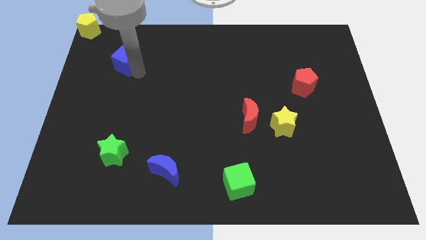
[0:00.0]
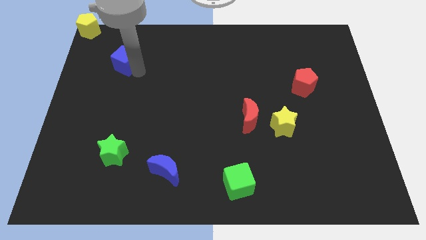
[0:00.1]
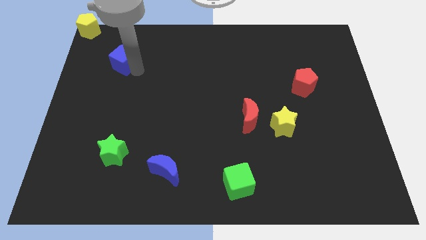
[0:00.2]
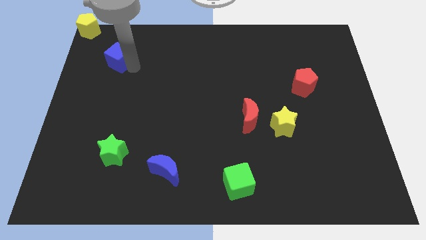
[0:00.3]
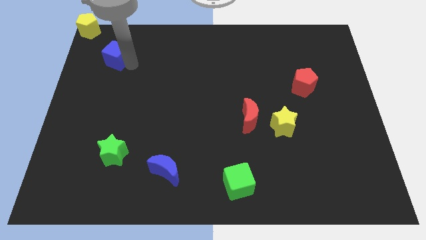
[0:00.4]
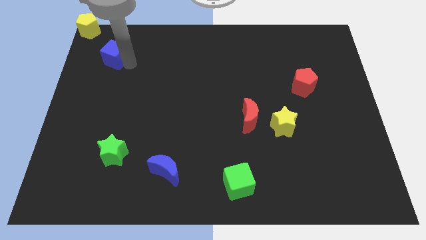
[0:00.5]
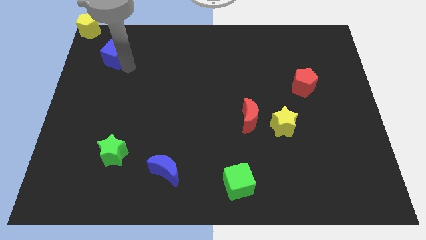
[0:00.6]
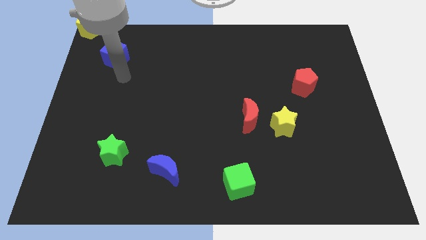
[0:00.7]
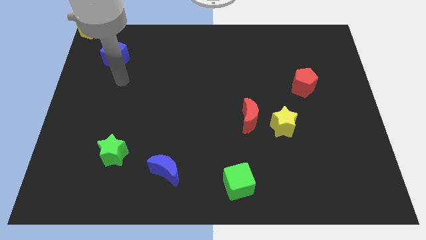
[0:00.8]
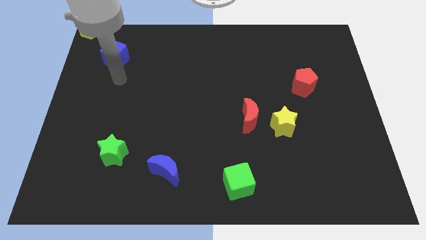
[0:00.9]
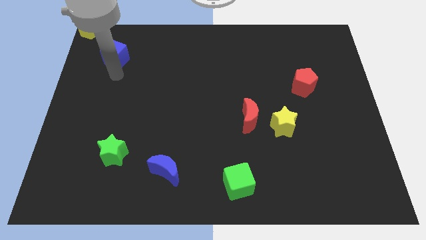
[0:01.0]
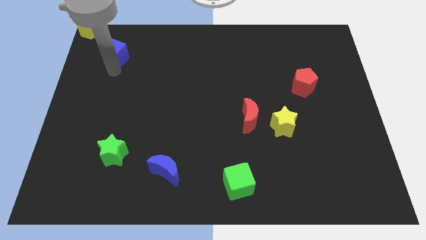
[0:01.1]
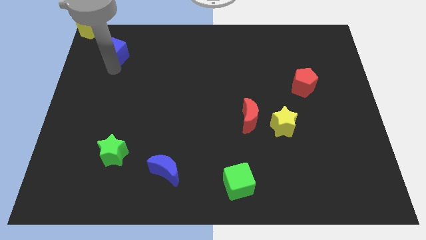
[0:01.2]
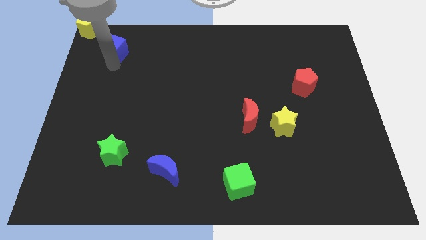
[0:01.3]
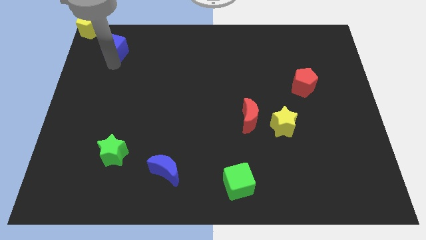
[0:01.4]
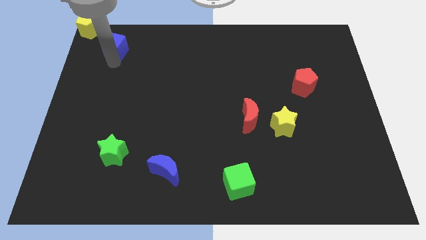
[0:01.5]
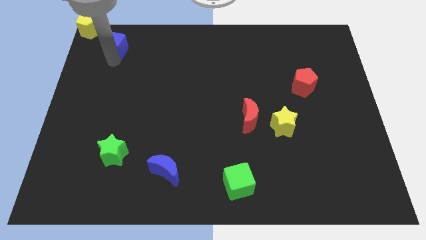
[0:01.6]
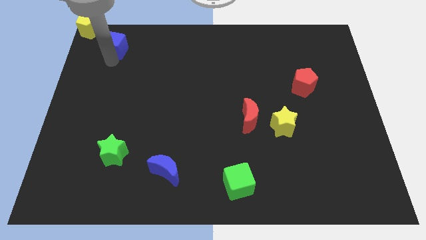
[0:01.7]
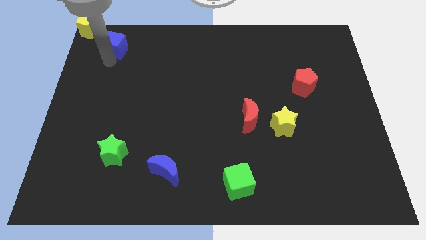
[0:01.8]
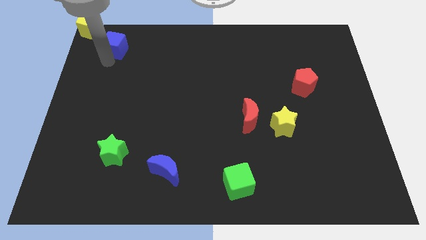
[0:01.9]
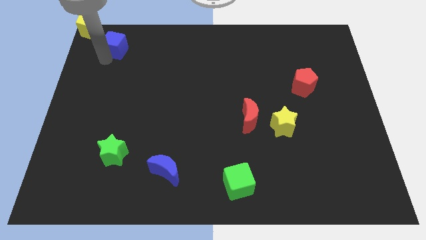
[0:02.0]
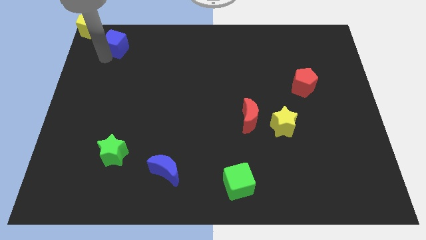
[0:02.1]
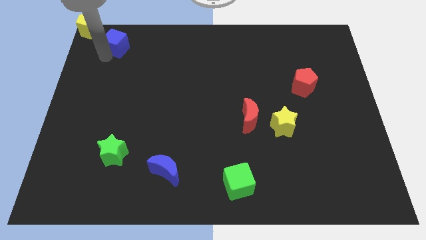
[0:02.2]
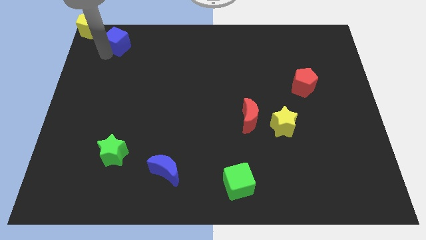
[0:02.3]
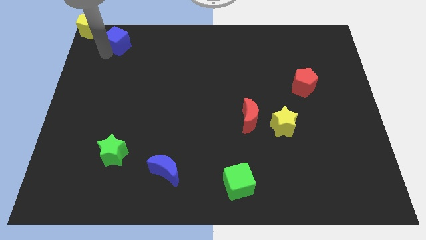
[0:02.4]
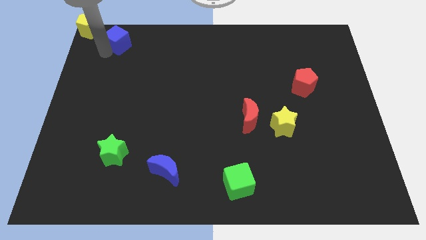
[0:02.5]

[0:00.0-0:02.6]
push the blue cube diagonally to yellow pentagon

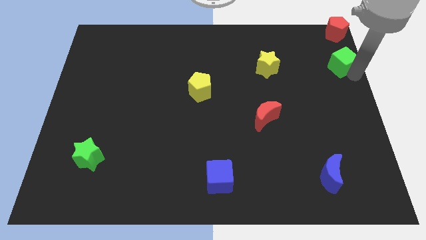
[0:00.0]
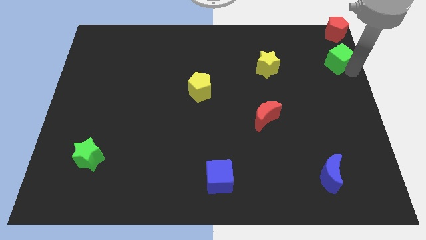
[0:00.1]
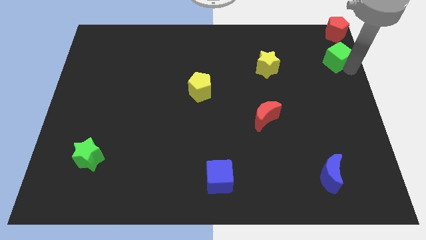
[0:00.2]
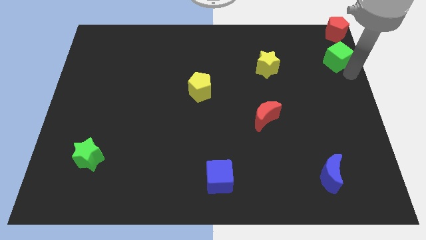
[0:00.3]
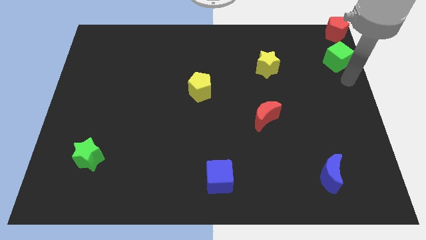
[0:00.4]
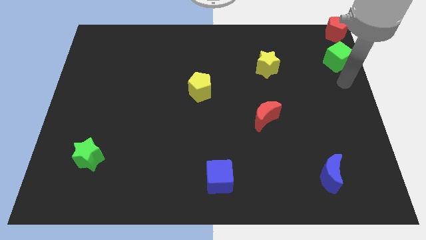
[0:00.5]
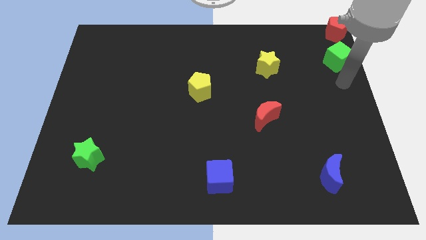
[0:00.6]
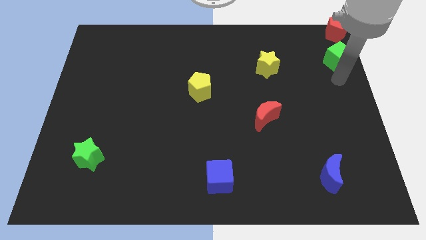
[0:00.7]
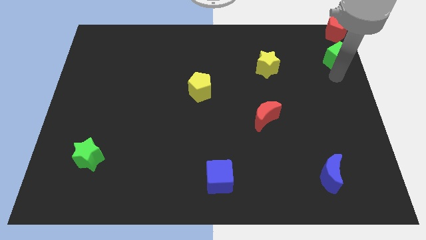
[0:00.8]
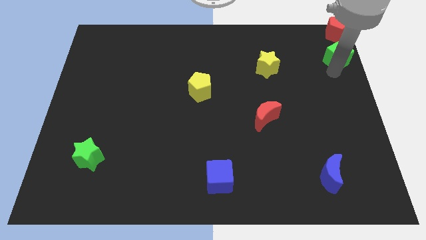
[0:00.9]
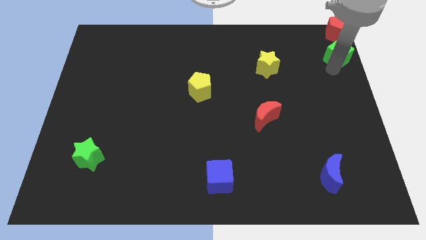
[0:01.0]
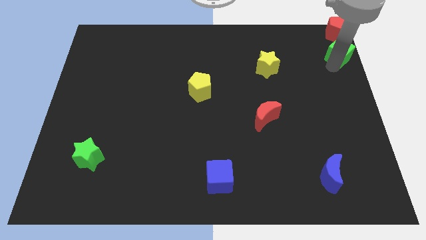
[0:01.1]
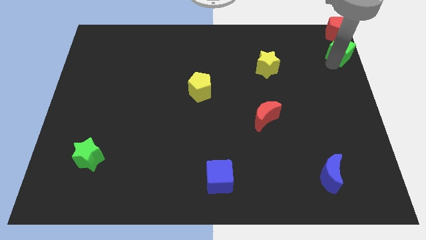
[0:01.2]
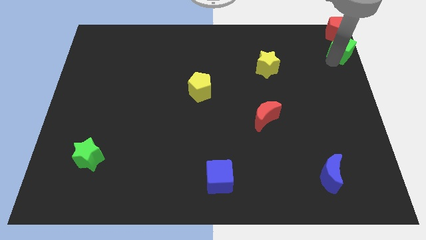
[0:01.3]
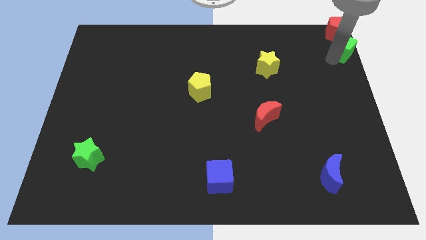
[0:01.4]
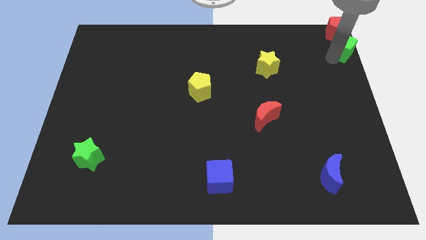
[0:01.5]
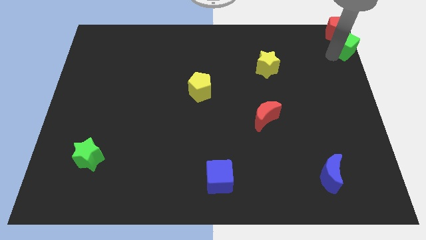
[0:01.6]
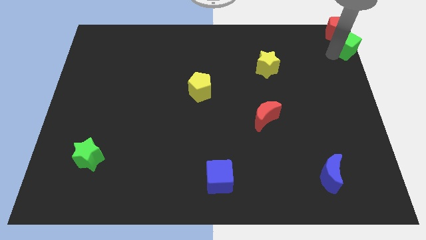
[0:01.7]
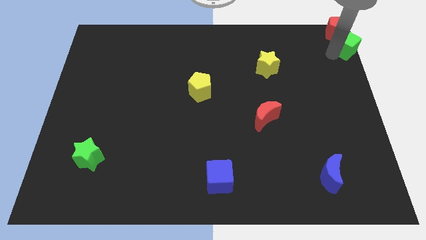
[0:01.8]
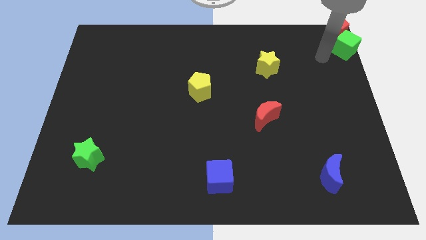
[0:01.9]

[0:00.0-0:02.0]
move the green cube into the red pentagon

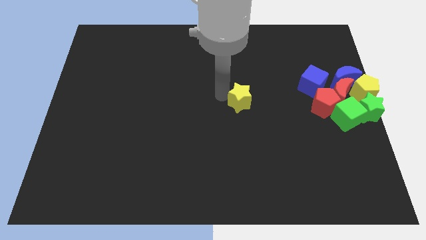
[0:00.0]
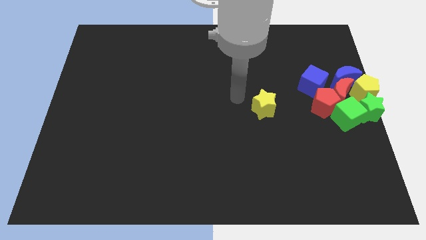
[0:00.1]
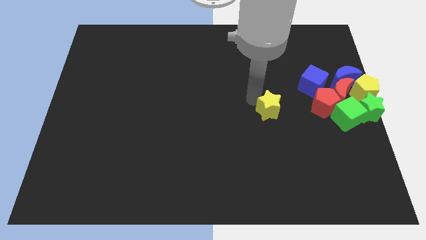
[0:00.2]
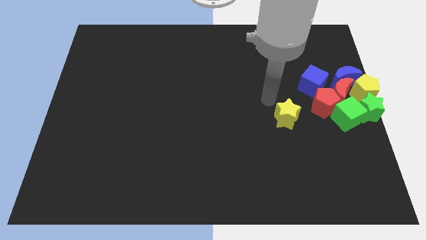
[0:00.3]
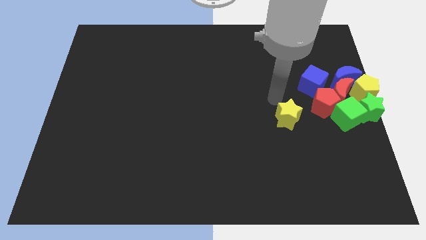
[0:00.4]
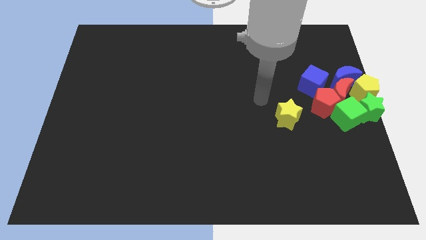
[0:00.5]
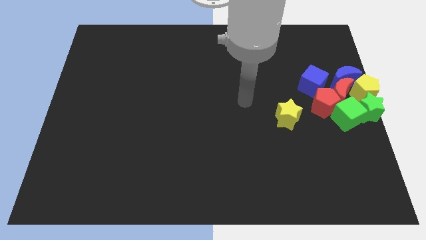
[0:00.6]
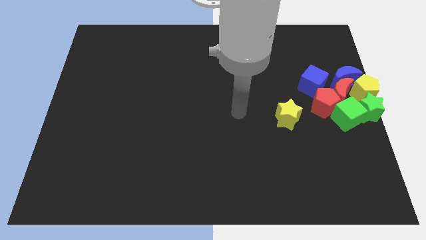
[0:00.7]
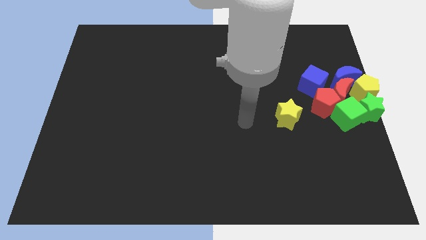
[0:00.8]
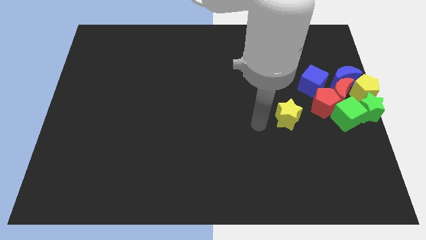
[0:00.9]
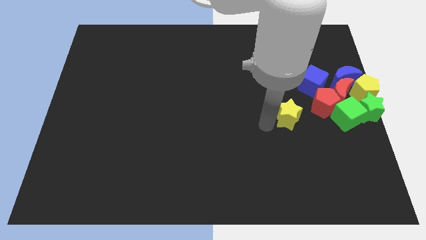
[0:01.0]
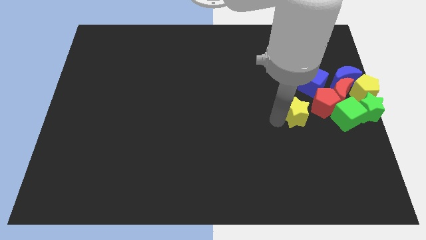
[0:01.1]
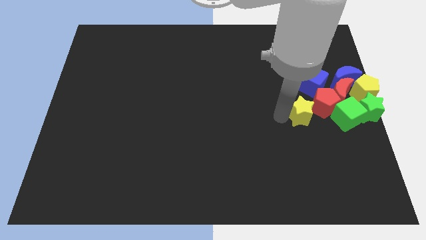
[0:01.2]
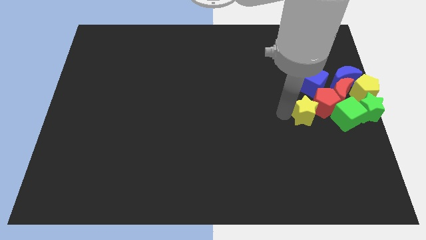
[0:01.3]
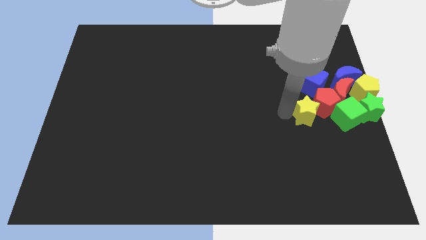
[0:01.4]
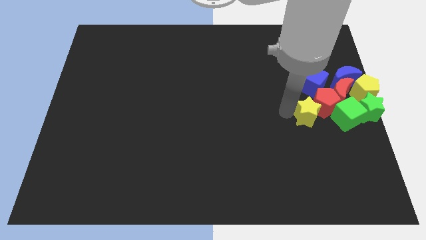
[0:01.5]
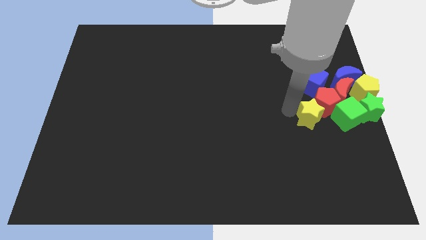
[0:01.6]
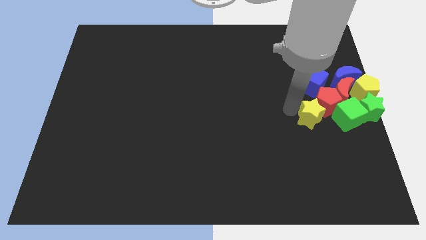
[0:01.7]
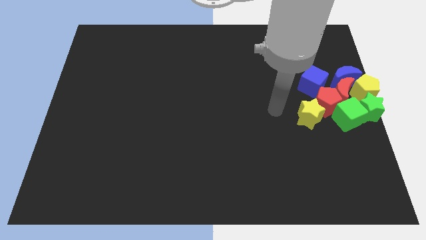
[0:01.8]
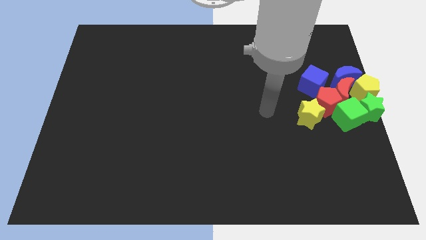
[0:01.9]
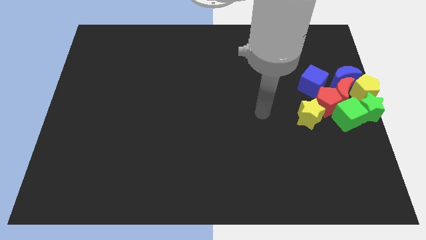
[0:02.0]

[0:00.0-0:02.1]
push the yellow star into the red pentagon

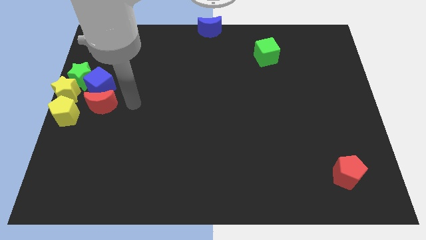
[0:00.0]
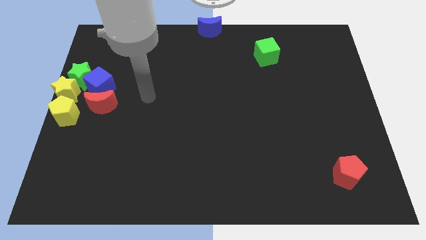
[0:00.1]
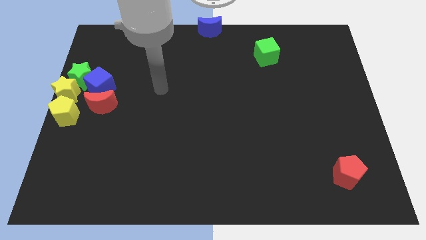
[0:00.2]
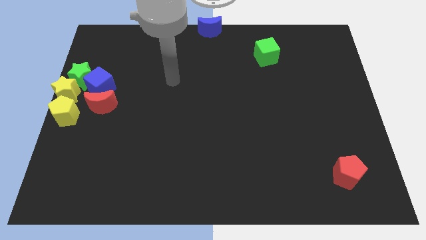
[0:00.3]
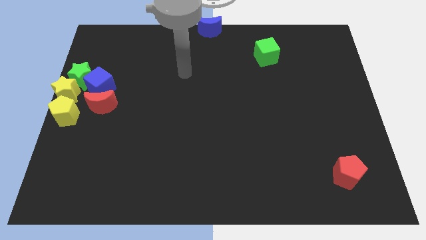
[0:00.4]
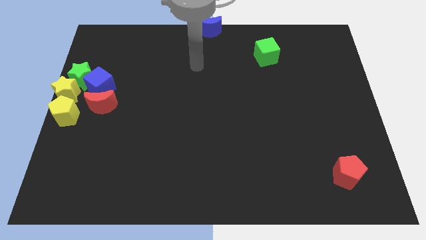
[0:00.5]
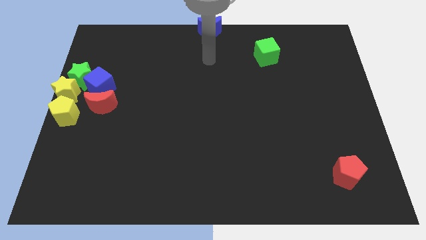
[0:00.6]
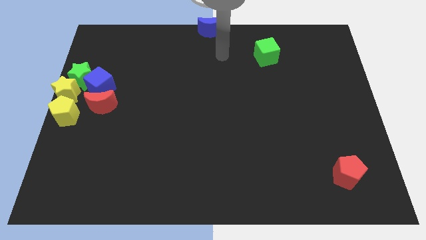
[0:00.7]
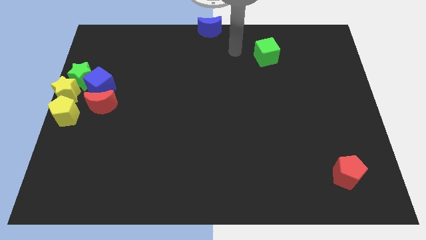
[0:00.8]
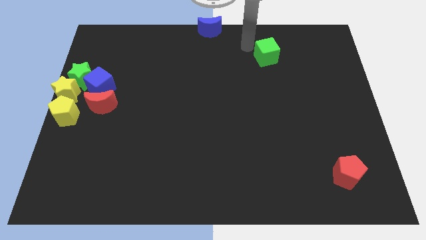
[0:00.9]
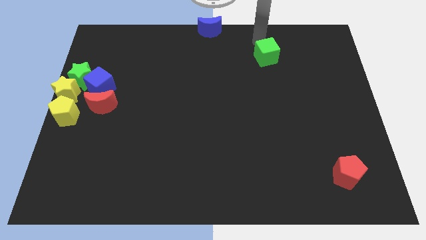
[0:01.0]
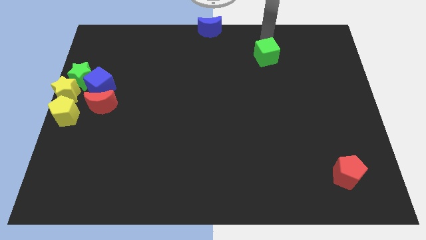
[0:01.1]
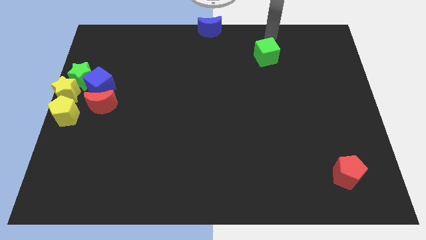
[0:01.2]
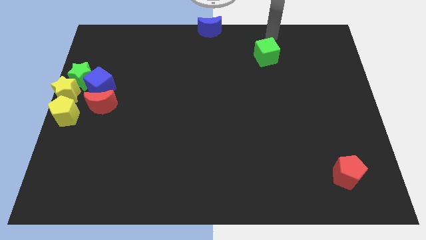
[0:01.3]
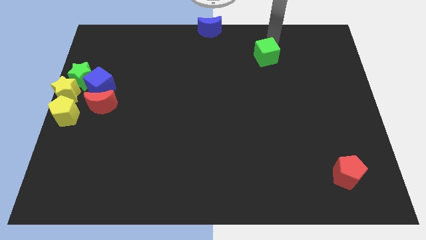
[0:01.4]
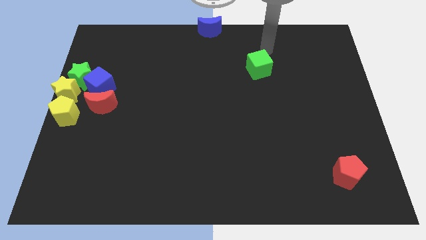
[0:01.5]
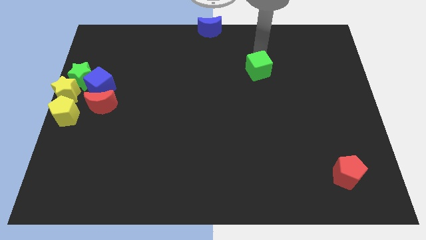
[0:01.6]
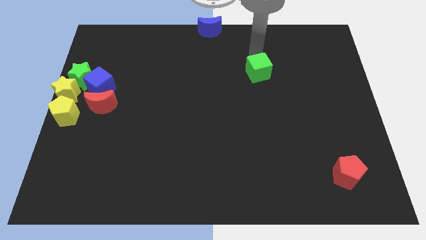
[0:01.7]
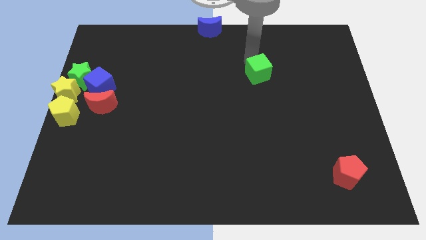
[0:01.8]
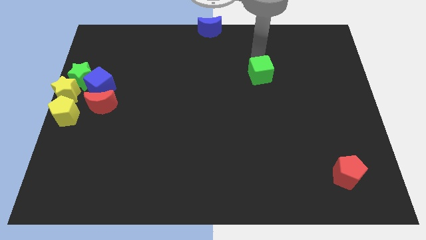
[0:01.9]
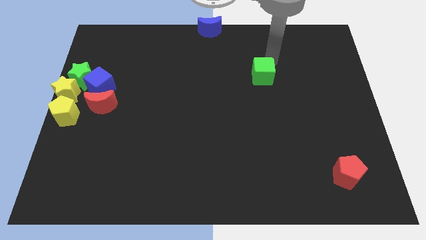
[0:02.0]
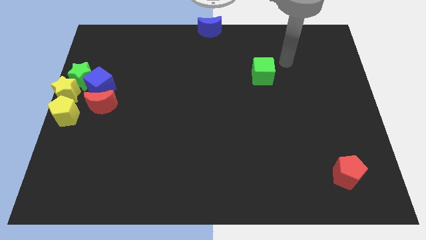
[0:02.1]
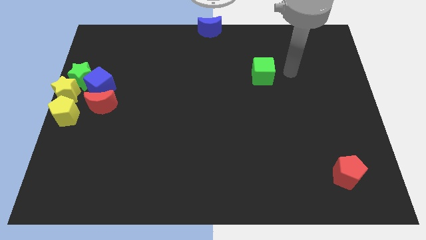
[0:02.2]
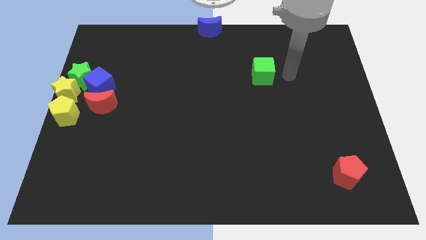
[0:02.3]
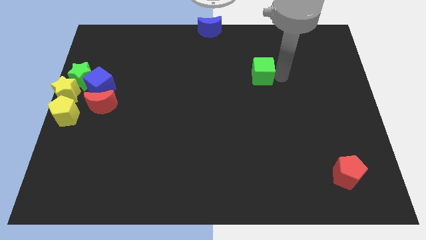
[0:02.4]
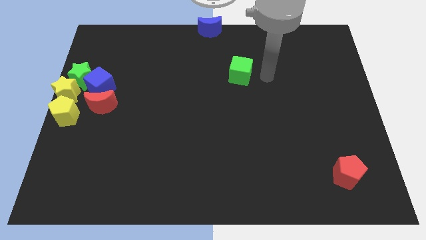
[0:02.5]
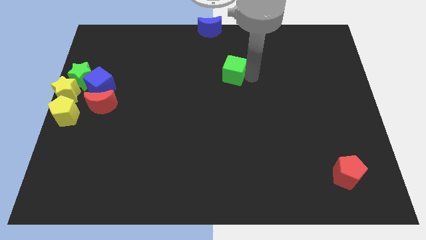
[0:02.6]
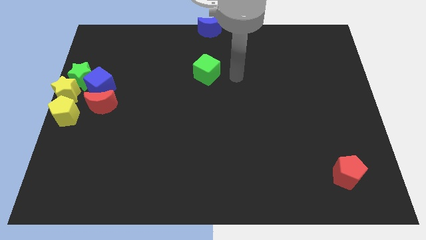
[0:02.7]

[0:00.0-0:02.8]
slide the green cube below the blue moon
